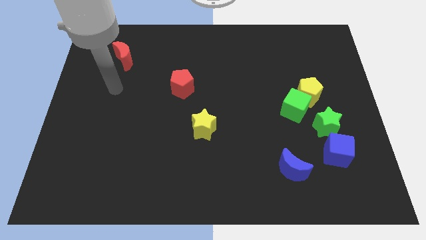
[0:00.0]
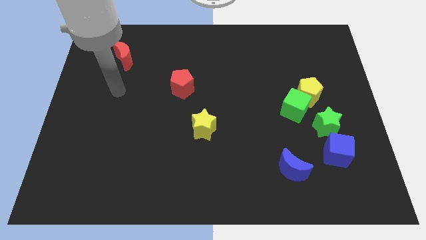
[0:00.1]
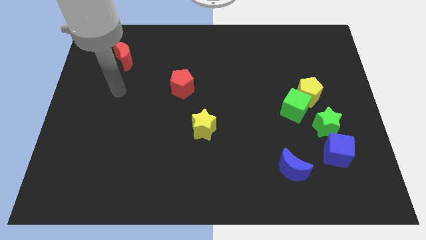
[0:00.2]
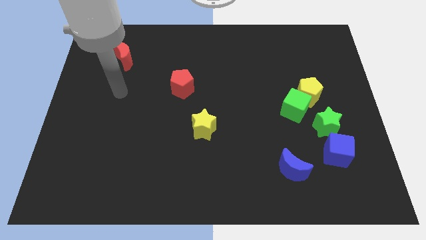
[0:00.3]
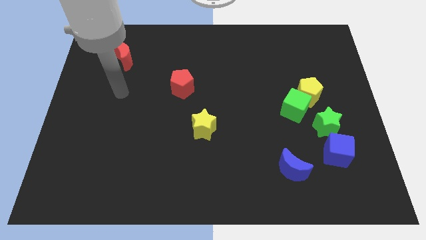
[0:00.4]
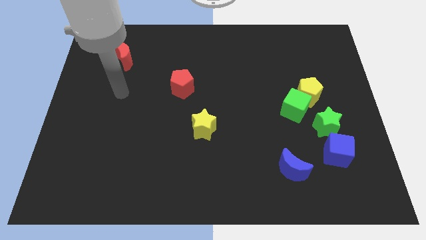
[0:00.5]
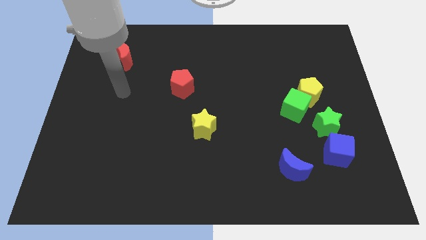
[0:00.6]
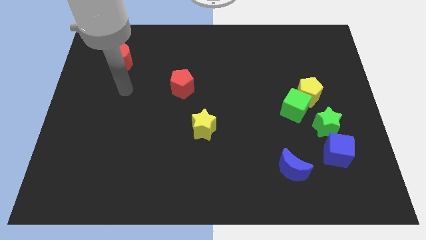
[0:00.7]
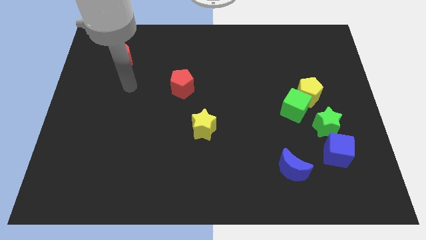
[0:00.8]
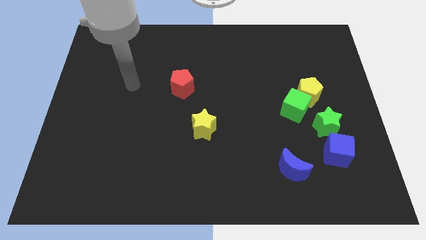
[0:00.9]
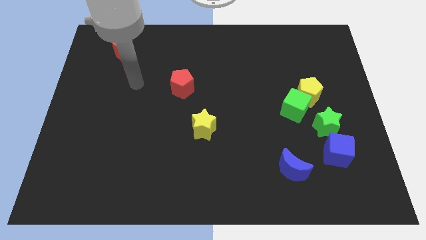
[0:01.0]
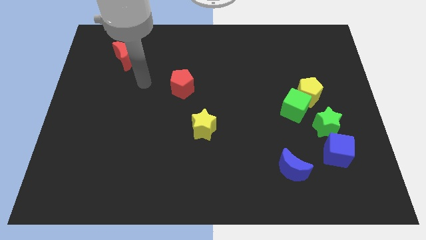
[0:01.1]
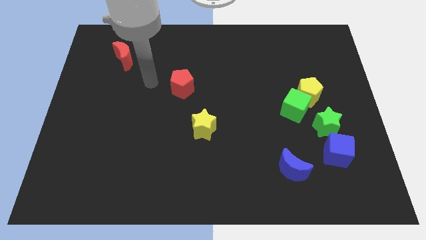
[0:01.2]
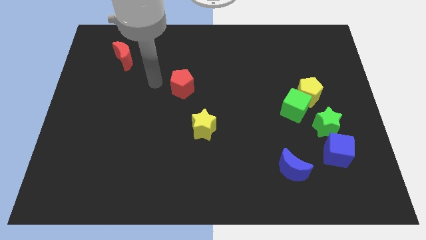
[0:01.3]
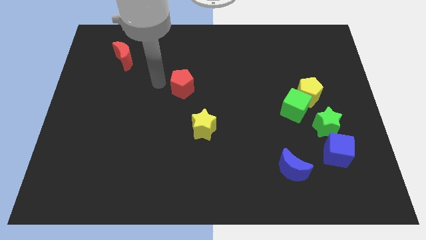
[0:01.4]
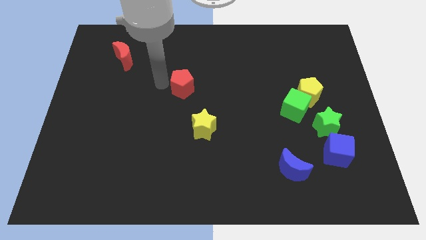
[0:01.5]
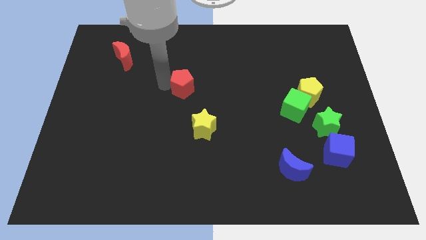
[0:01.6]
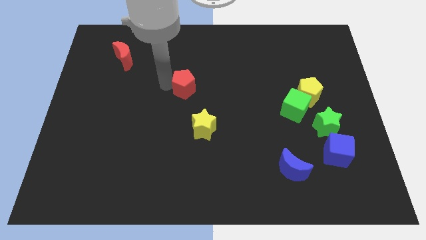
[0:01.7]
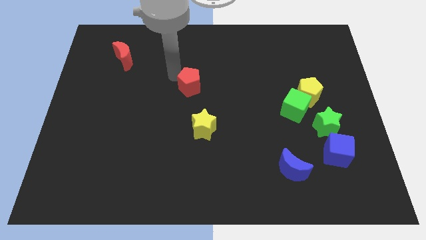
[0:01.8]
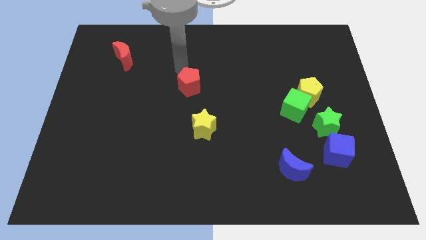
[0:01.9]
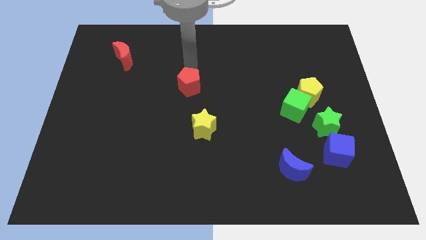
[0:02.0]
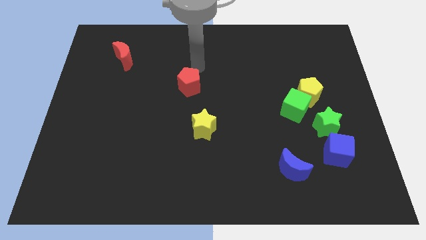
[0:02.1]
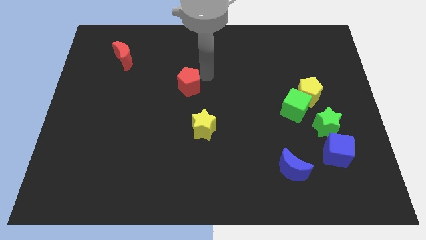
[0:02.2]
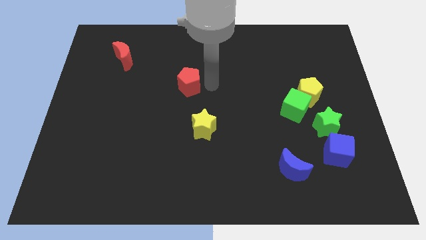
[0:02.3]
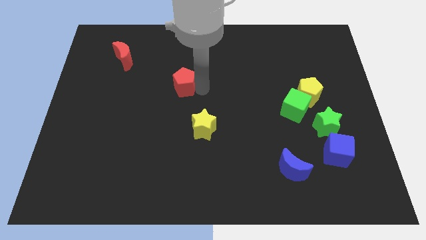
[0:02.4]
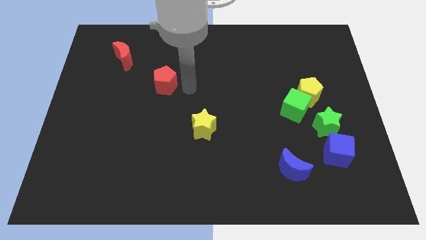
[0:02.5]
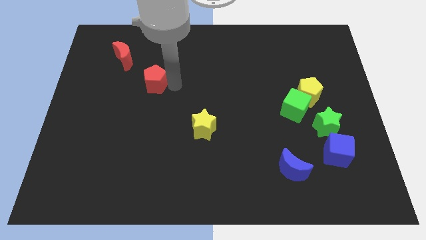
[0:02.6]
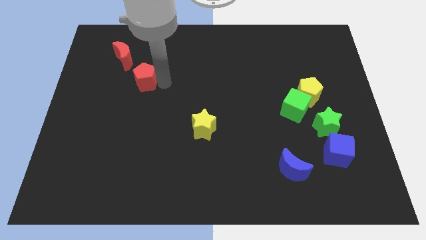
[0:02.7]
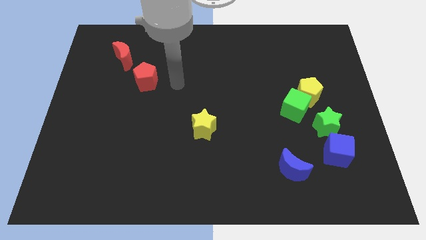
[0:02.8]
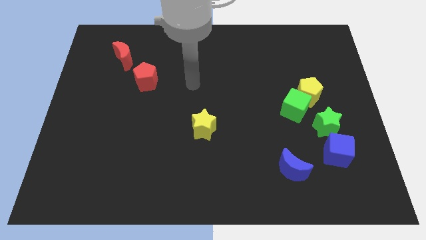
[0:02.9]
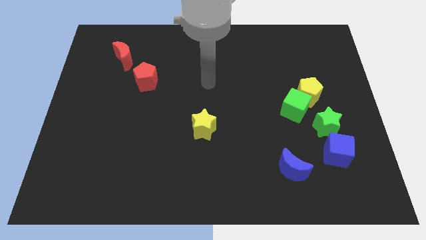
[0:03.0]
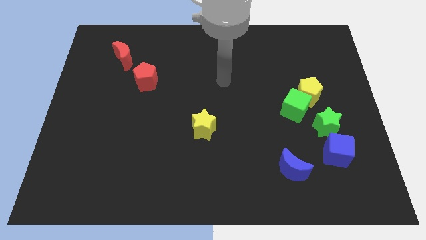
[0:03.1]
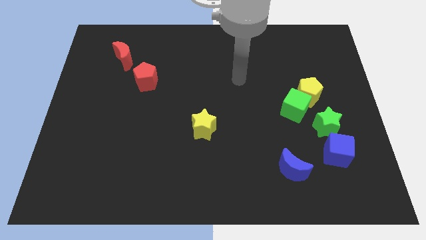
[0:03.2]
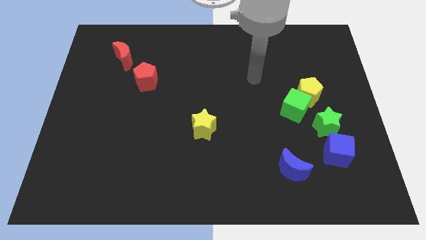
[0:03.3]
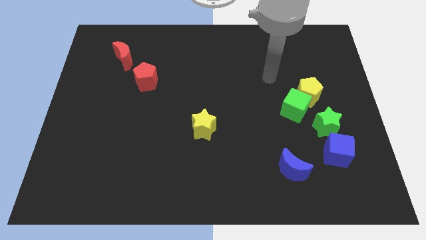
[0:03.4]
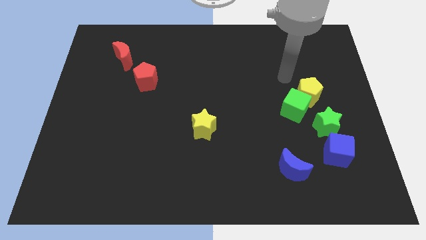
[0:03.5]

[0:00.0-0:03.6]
move the red pentagon to the bottom right side of the red crescent

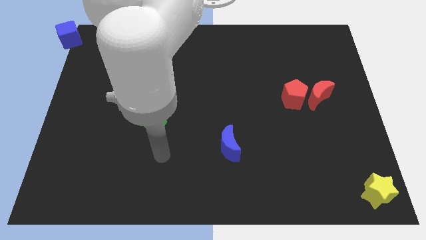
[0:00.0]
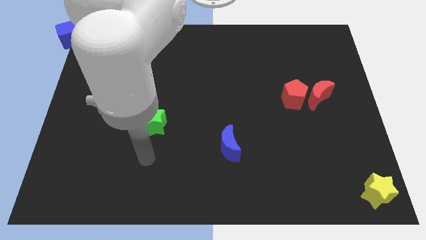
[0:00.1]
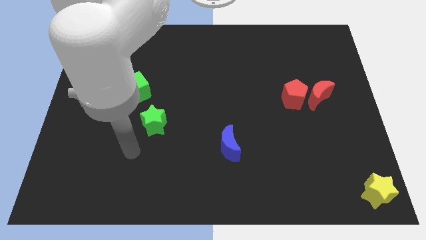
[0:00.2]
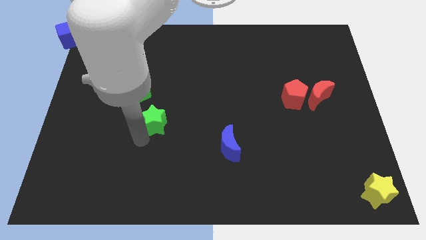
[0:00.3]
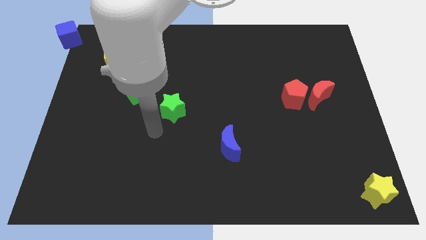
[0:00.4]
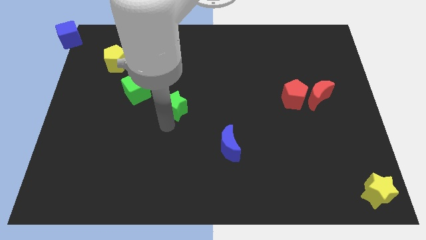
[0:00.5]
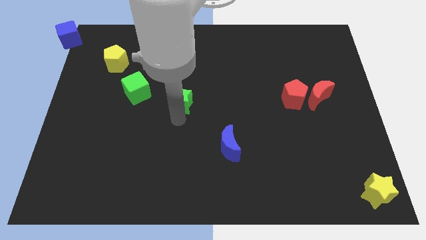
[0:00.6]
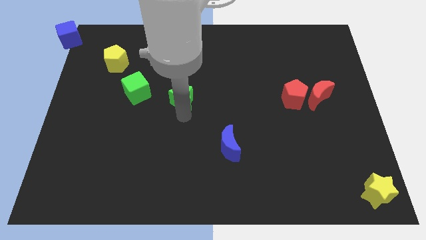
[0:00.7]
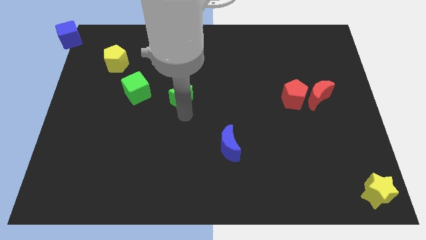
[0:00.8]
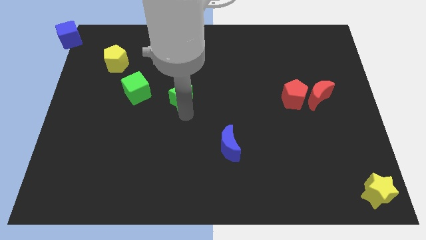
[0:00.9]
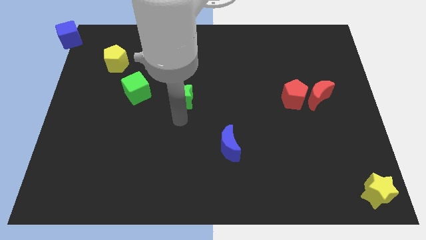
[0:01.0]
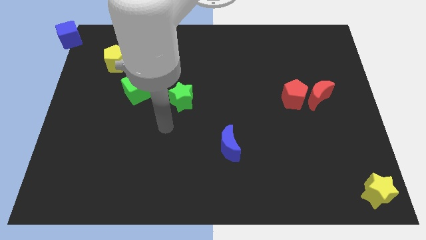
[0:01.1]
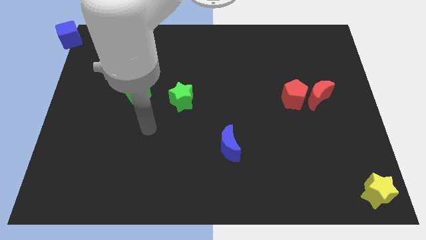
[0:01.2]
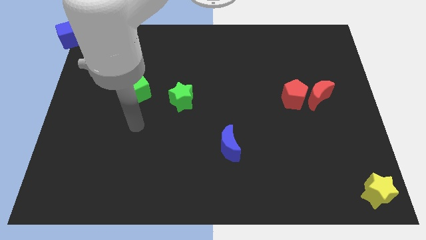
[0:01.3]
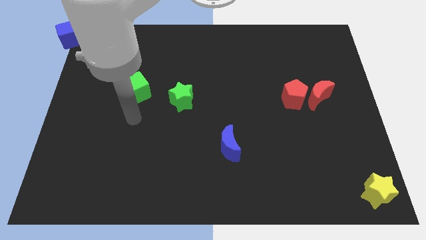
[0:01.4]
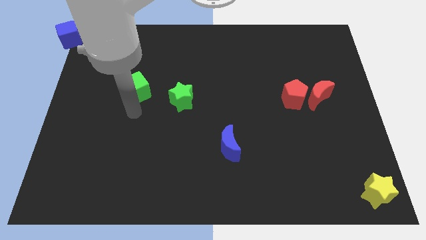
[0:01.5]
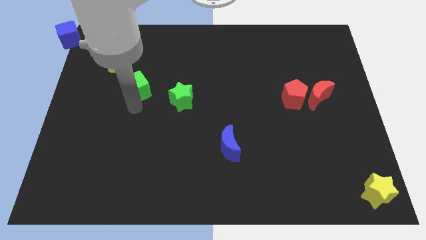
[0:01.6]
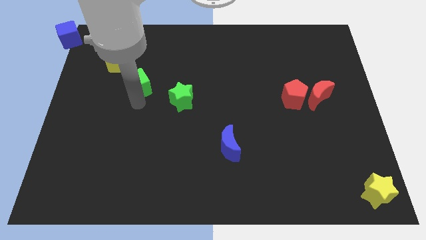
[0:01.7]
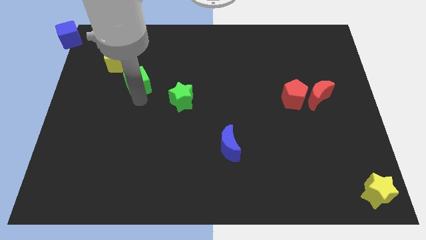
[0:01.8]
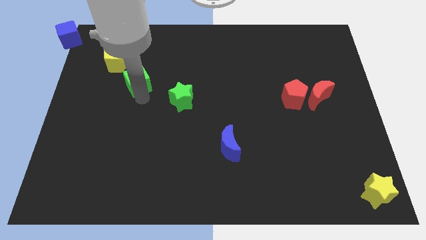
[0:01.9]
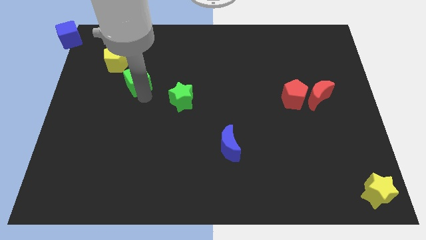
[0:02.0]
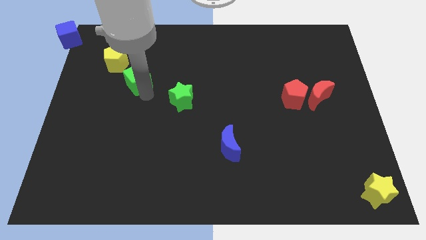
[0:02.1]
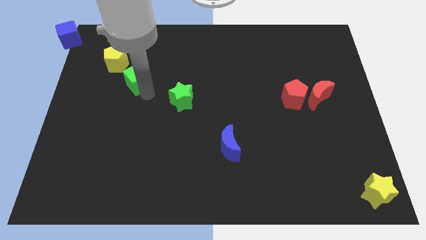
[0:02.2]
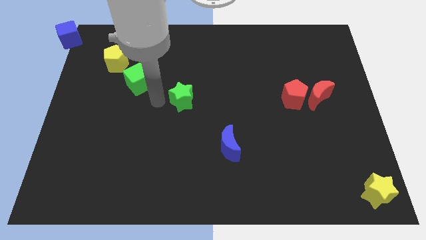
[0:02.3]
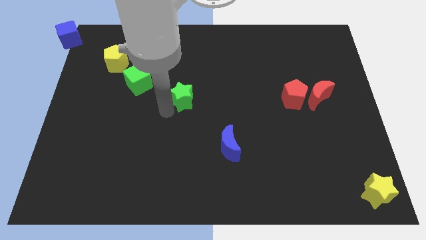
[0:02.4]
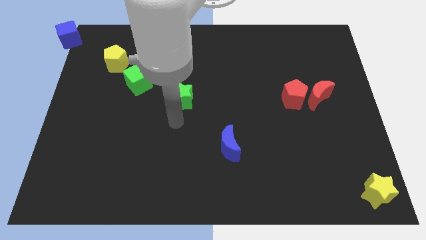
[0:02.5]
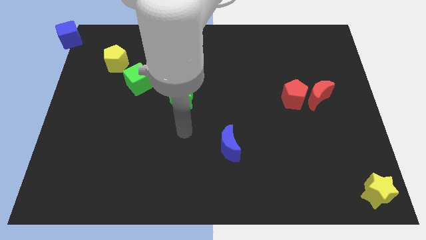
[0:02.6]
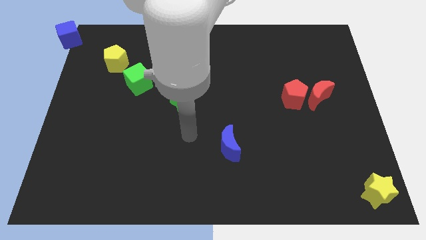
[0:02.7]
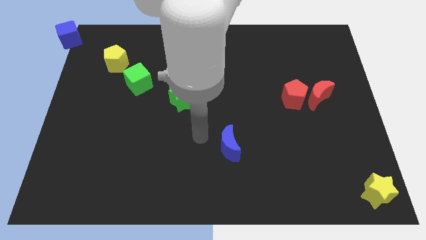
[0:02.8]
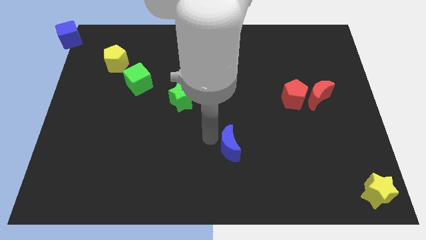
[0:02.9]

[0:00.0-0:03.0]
place the green cube in between the yellow pentagon and green star

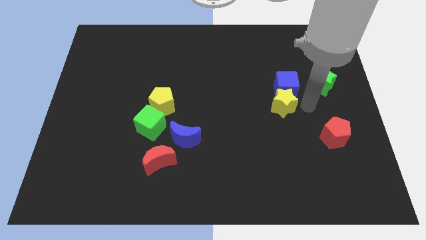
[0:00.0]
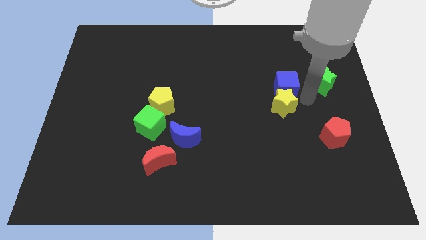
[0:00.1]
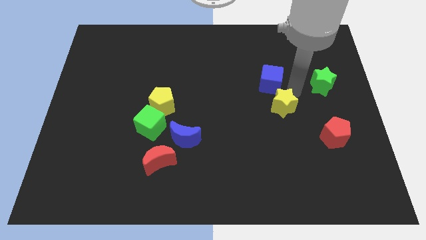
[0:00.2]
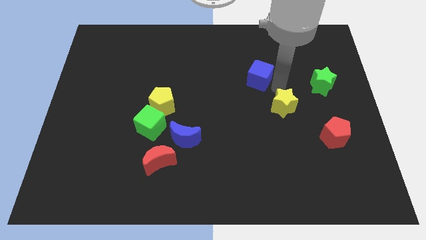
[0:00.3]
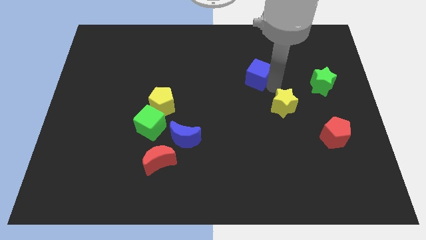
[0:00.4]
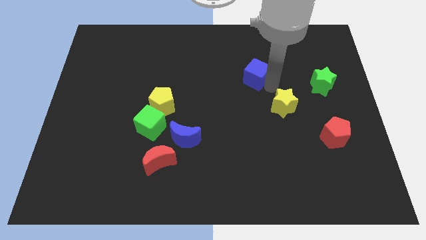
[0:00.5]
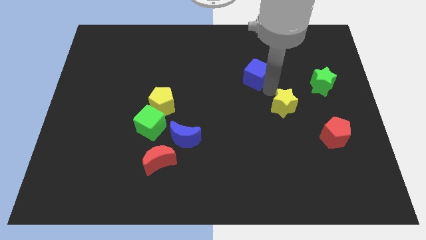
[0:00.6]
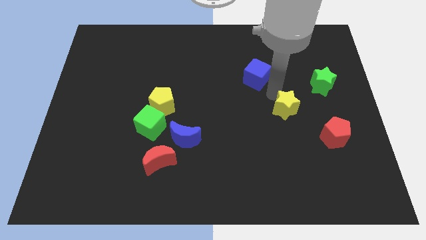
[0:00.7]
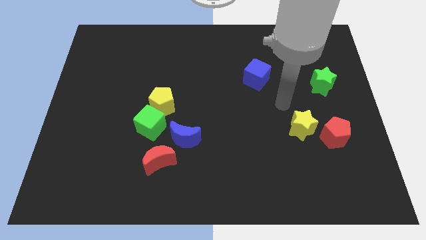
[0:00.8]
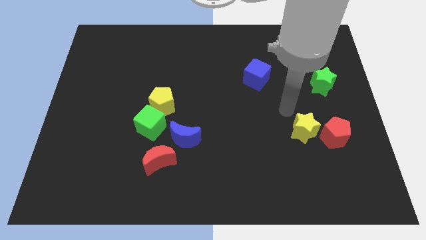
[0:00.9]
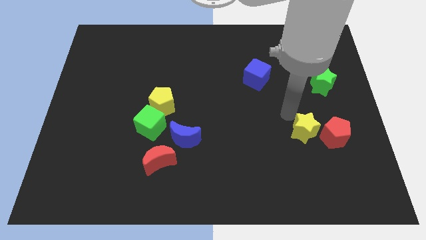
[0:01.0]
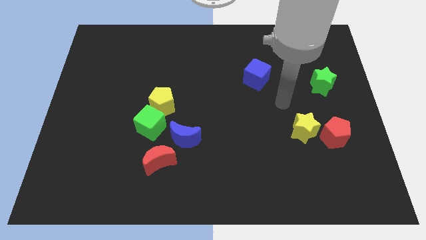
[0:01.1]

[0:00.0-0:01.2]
separate yellow star and blue cube from each other

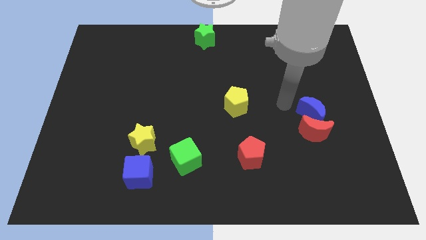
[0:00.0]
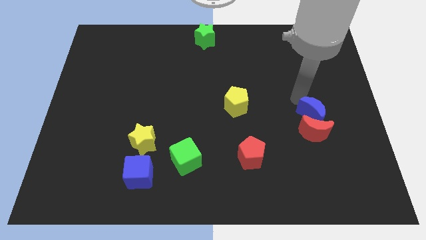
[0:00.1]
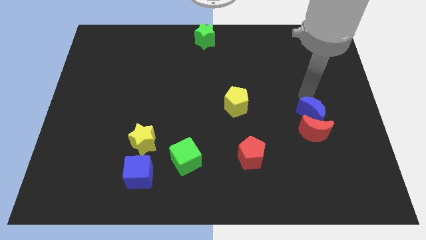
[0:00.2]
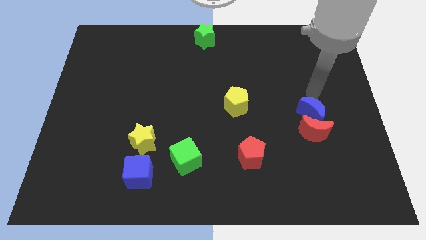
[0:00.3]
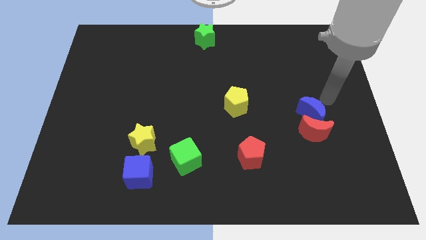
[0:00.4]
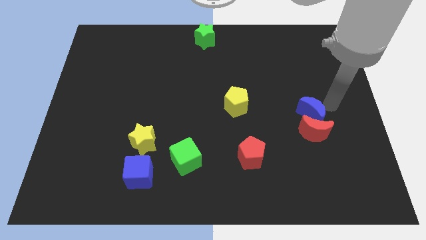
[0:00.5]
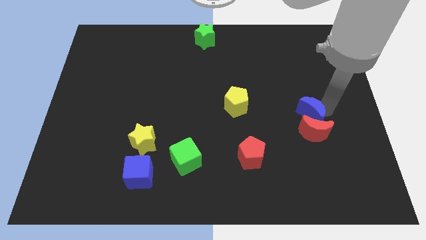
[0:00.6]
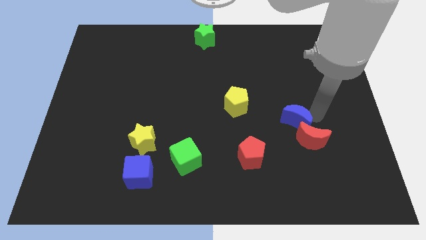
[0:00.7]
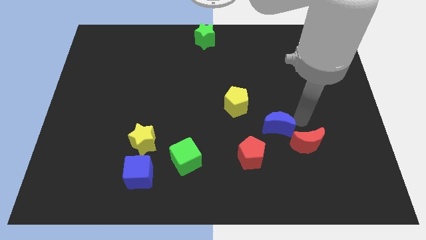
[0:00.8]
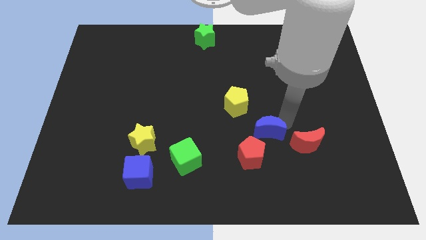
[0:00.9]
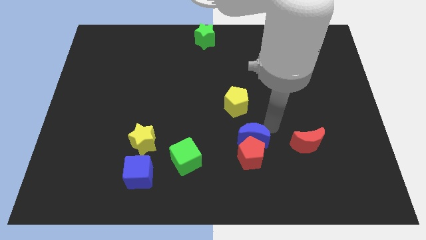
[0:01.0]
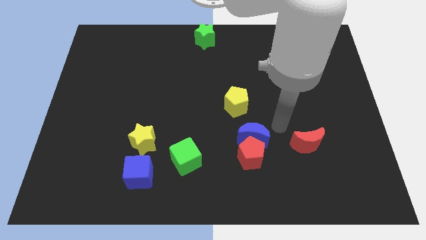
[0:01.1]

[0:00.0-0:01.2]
move the blue crescent to the top of the red pentagon
